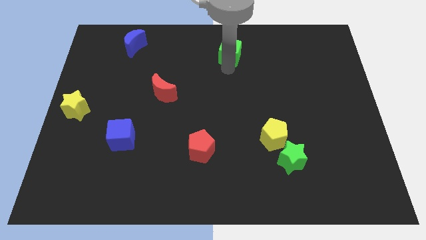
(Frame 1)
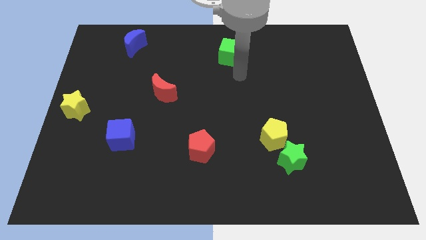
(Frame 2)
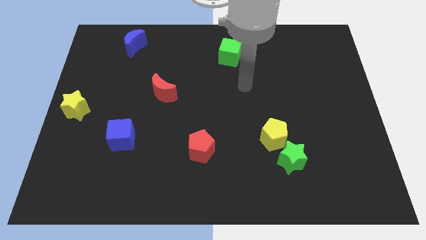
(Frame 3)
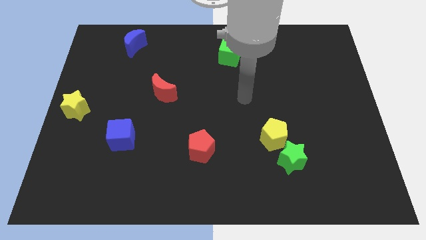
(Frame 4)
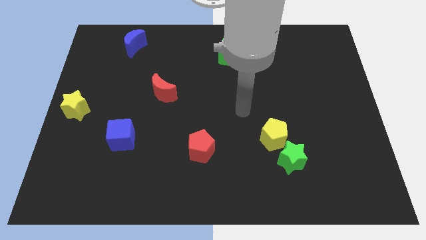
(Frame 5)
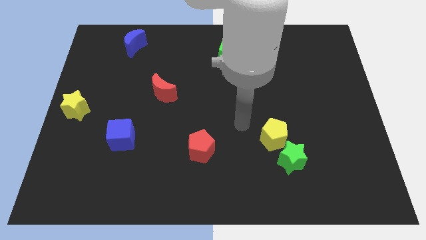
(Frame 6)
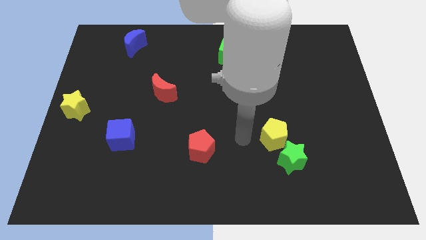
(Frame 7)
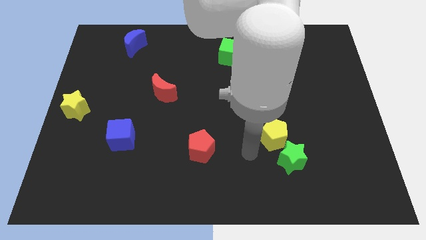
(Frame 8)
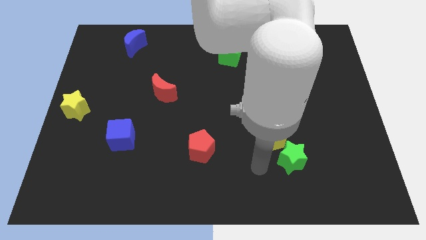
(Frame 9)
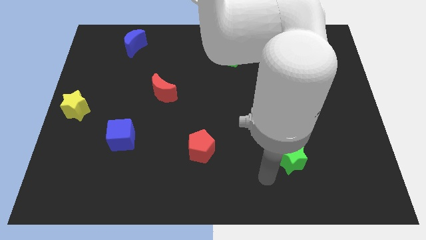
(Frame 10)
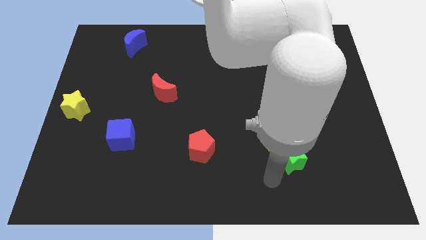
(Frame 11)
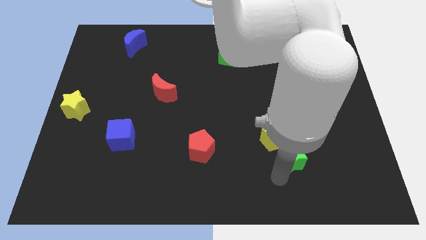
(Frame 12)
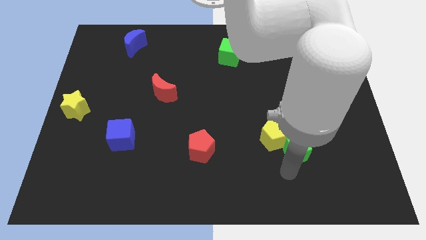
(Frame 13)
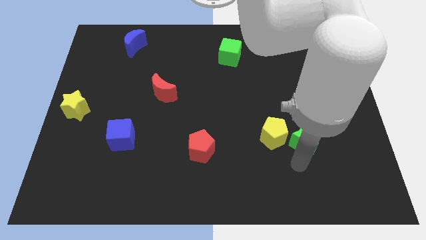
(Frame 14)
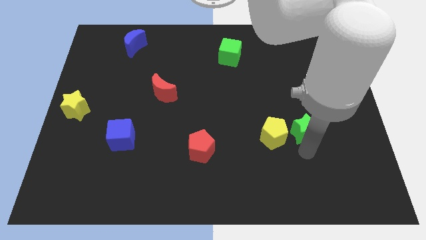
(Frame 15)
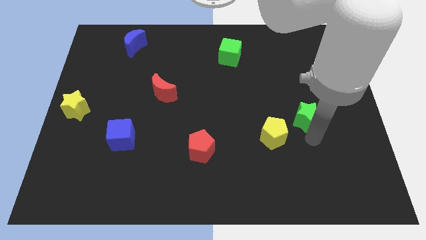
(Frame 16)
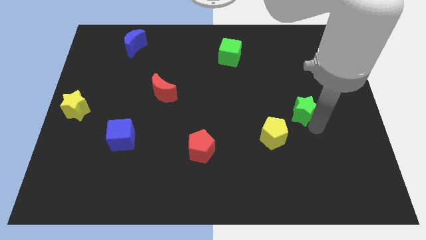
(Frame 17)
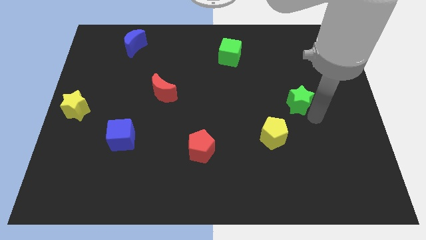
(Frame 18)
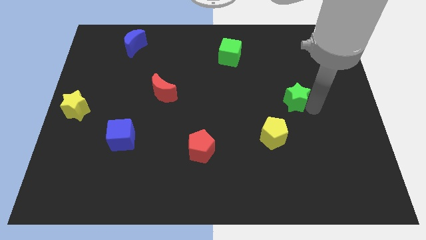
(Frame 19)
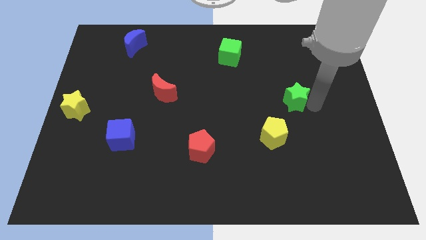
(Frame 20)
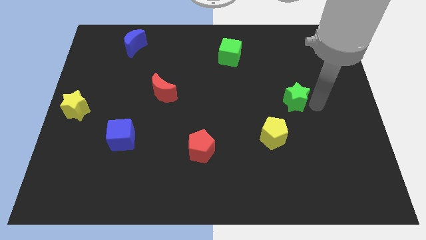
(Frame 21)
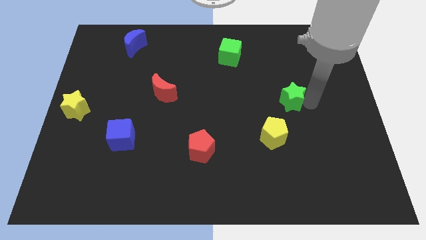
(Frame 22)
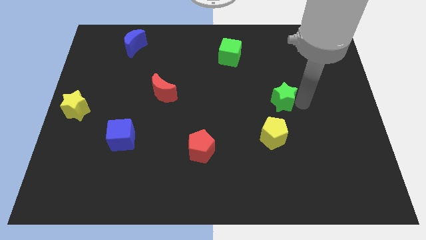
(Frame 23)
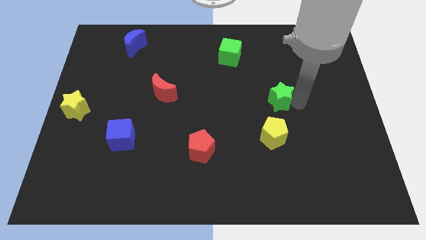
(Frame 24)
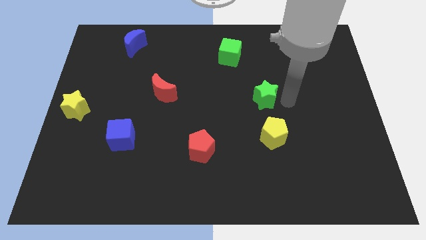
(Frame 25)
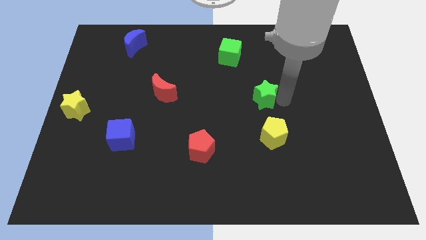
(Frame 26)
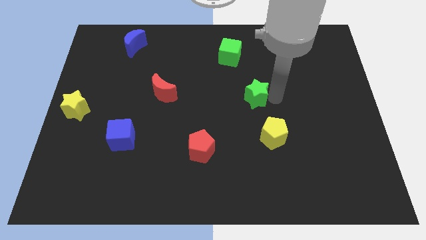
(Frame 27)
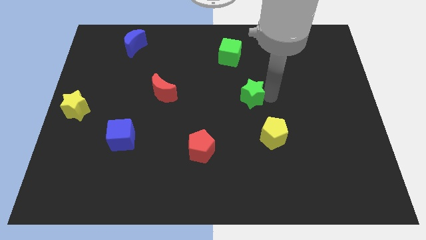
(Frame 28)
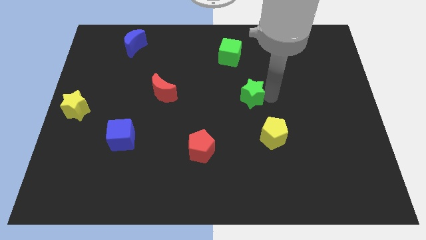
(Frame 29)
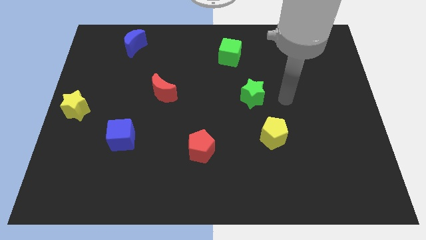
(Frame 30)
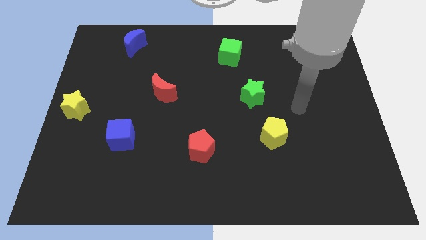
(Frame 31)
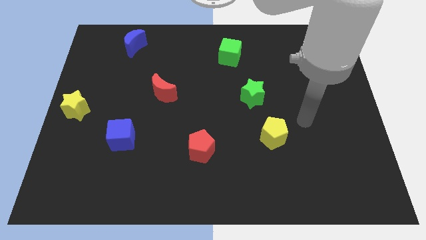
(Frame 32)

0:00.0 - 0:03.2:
move your arm away from the green star

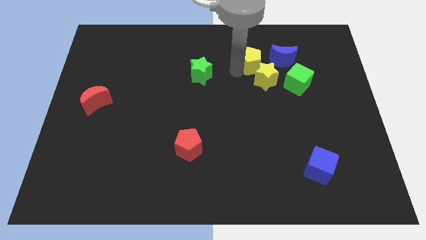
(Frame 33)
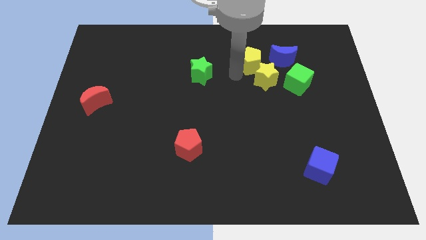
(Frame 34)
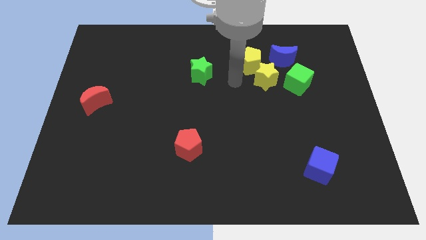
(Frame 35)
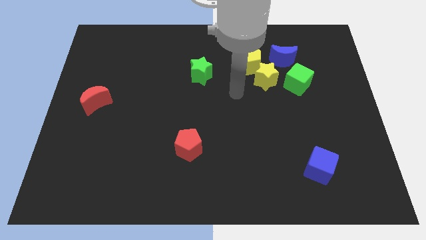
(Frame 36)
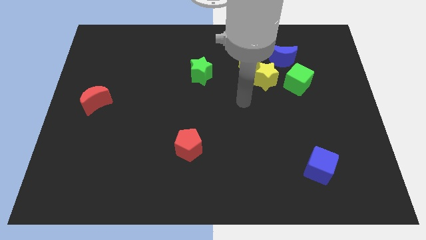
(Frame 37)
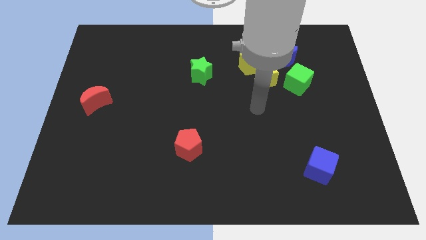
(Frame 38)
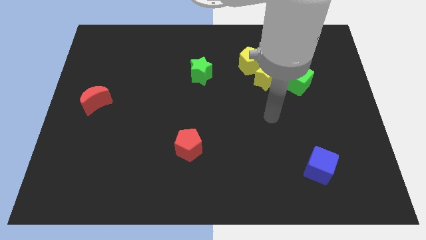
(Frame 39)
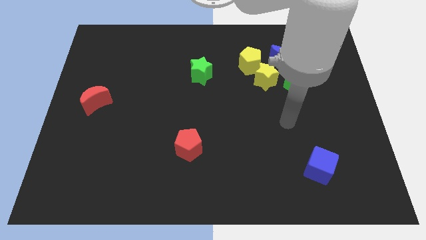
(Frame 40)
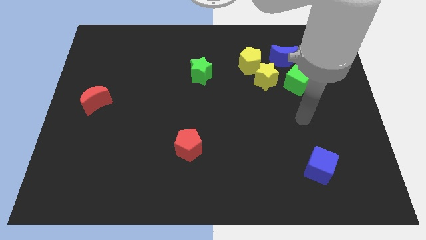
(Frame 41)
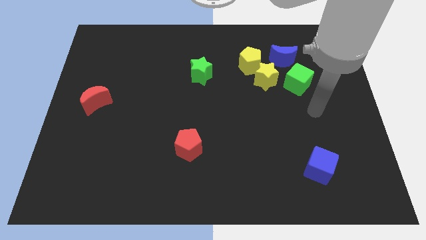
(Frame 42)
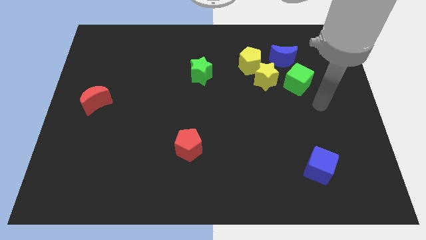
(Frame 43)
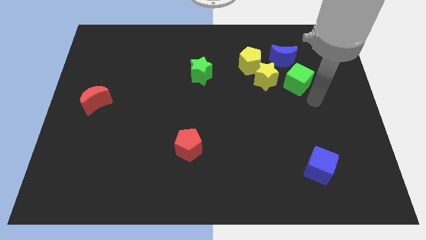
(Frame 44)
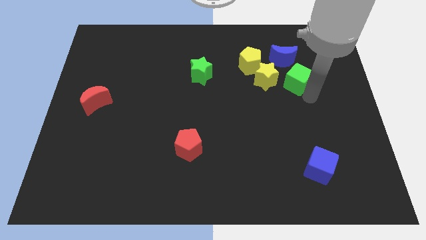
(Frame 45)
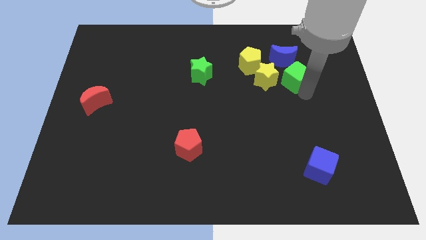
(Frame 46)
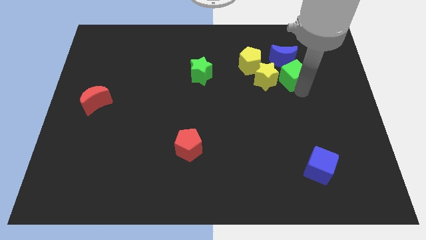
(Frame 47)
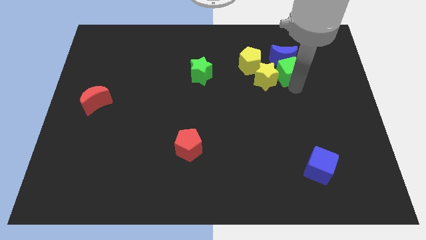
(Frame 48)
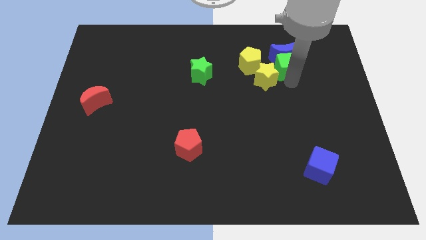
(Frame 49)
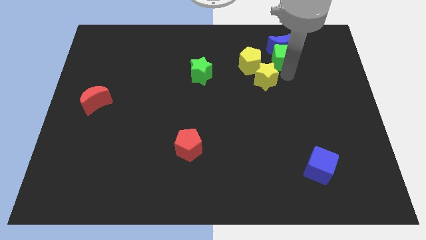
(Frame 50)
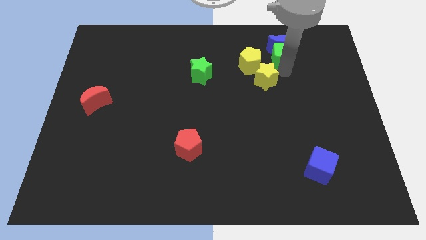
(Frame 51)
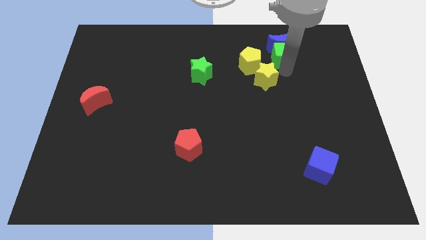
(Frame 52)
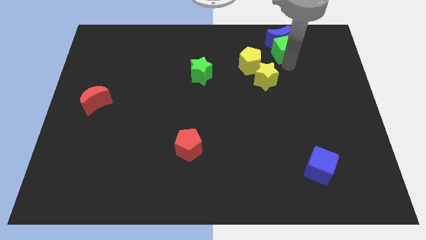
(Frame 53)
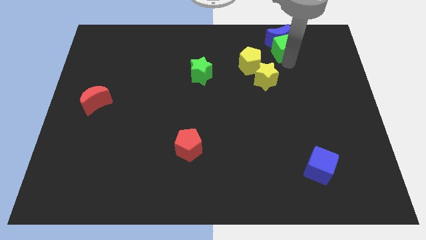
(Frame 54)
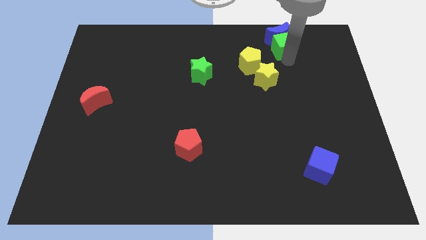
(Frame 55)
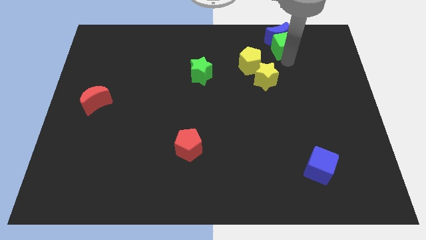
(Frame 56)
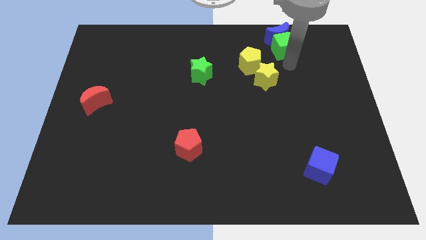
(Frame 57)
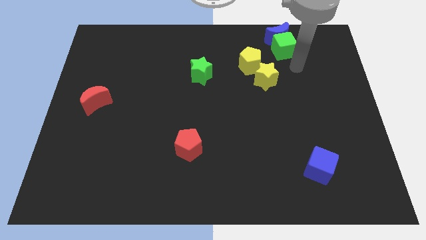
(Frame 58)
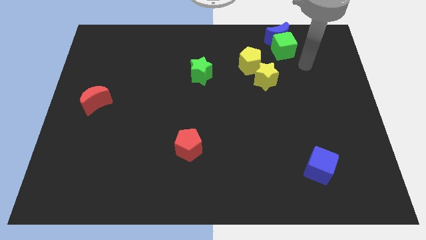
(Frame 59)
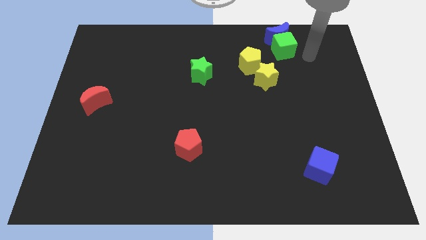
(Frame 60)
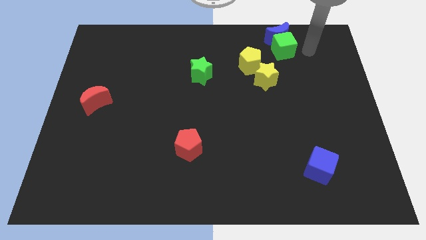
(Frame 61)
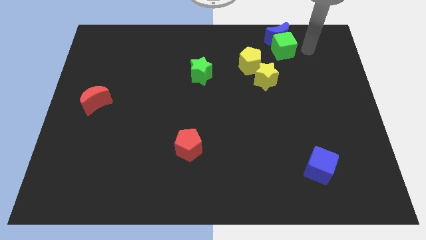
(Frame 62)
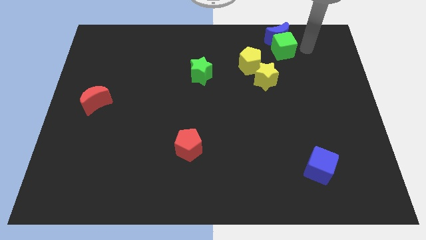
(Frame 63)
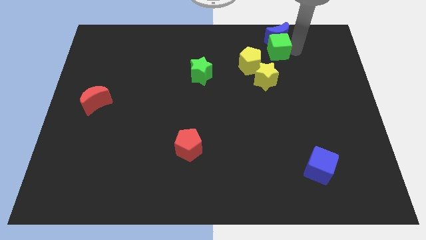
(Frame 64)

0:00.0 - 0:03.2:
move the green cube below the blue moon

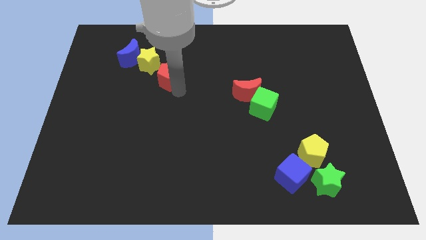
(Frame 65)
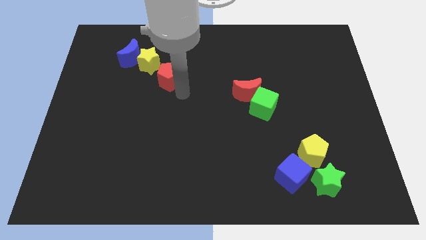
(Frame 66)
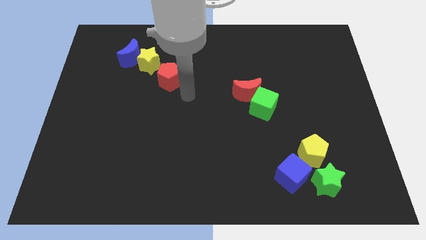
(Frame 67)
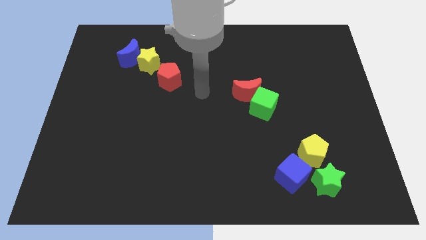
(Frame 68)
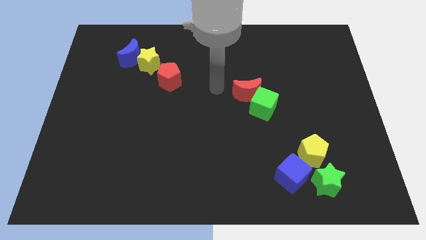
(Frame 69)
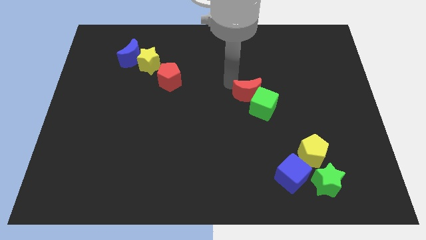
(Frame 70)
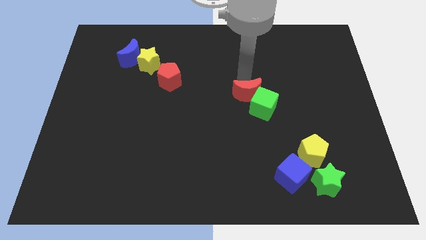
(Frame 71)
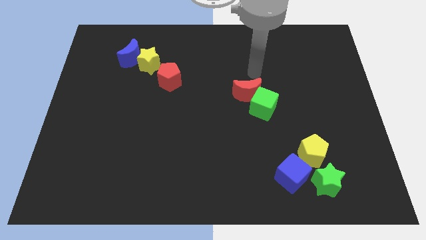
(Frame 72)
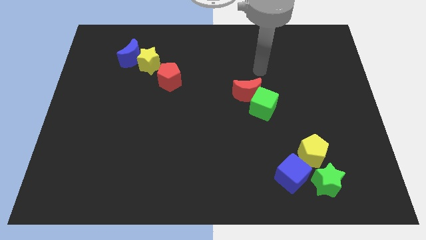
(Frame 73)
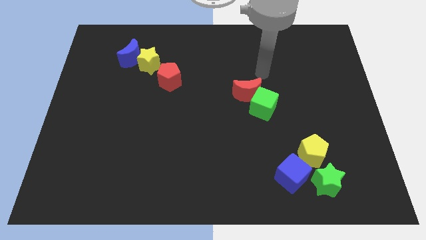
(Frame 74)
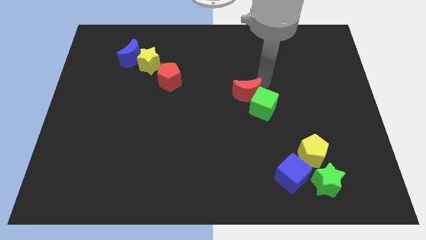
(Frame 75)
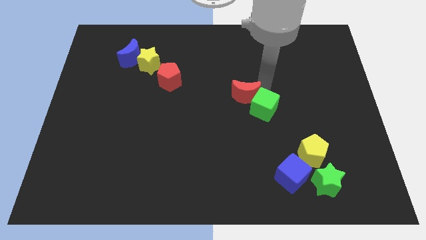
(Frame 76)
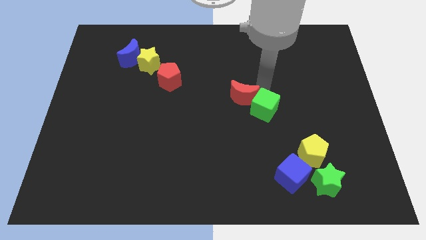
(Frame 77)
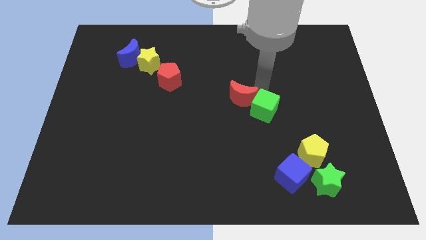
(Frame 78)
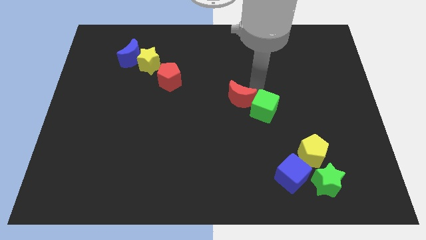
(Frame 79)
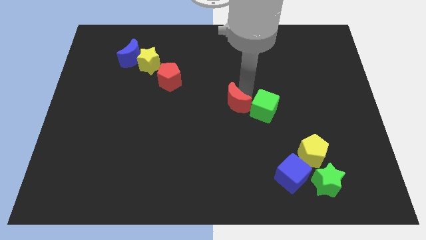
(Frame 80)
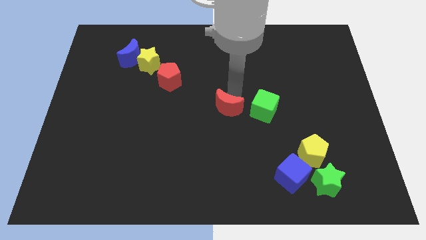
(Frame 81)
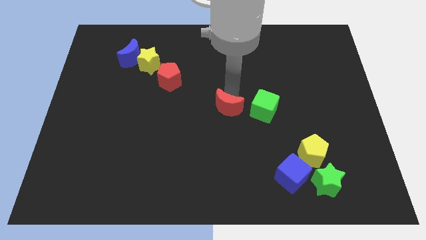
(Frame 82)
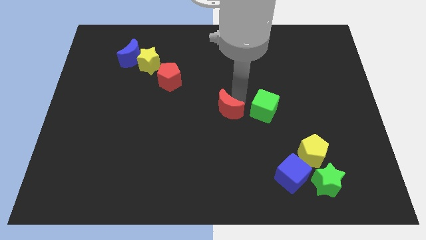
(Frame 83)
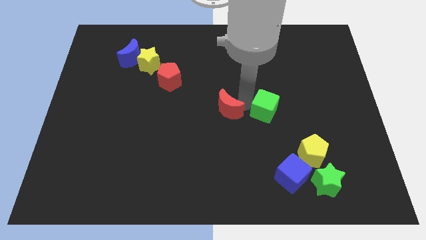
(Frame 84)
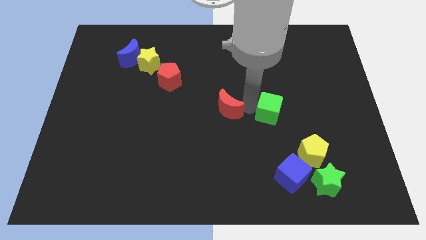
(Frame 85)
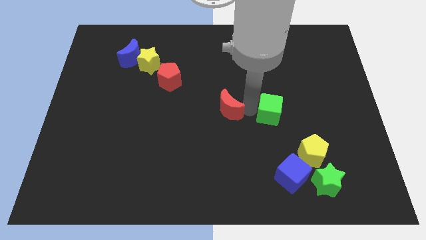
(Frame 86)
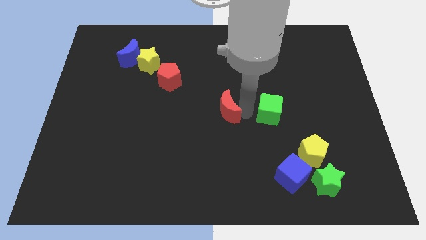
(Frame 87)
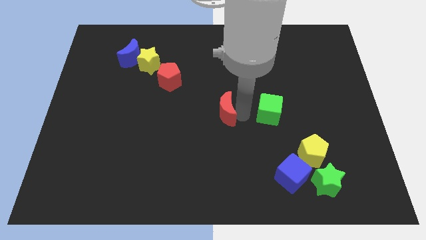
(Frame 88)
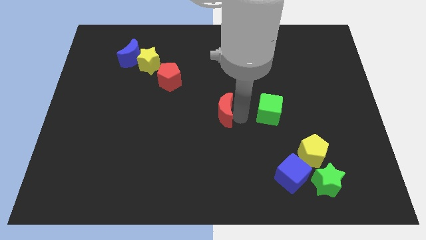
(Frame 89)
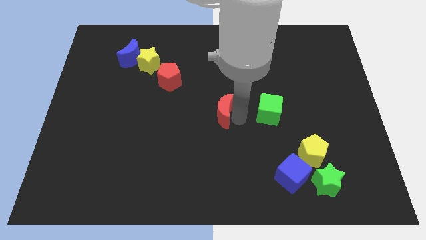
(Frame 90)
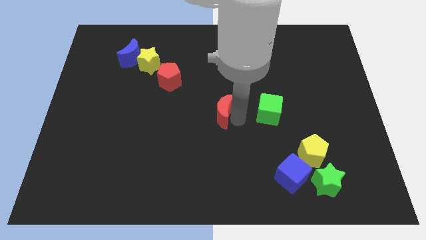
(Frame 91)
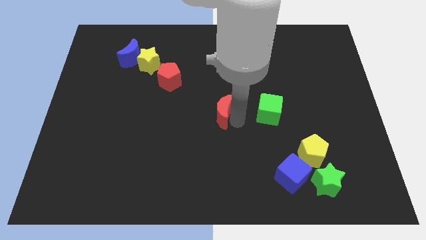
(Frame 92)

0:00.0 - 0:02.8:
separate the red crescent and green cube
